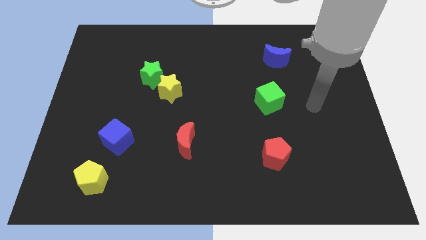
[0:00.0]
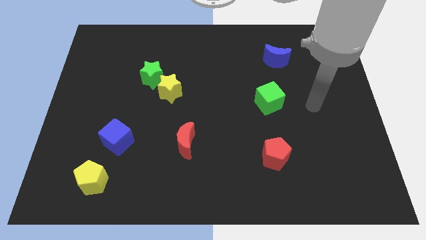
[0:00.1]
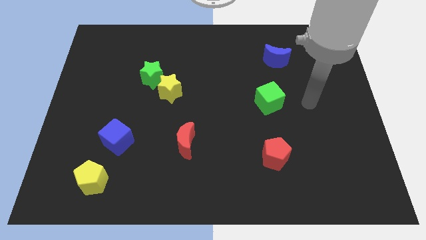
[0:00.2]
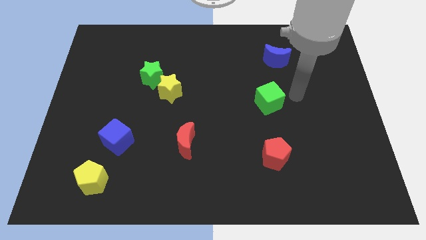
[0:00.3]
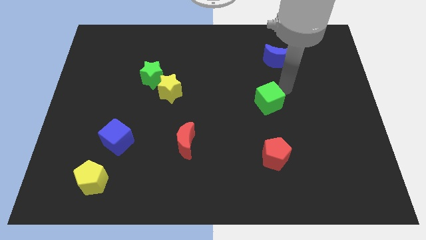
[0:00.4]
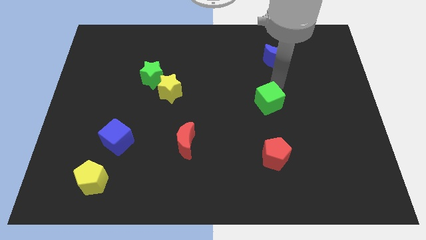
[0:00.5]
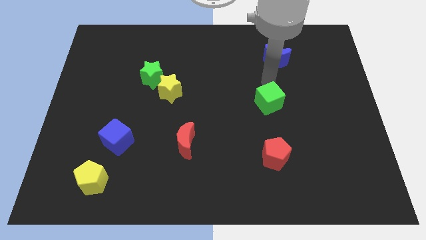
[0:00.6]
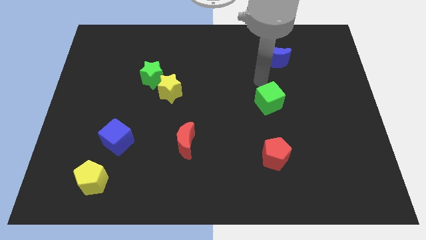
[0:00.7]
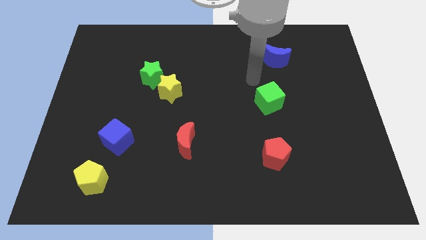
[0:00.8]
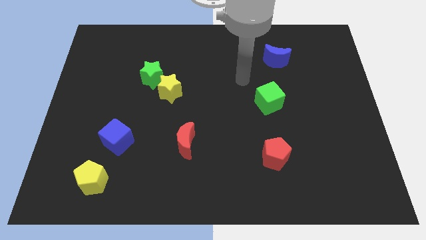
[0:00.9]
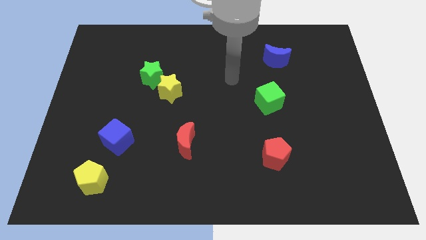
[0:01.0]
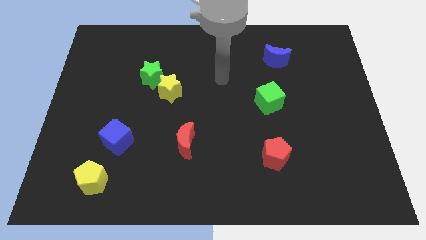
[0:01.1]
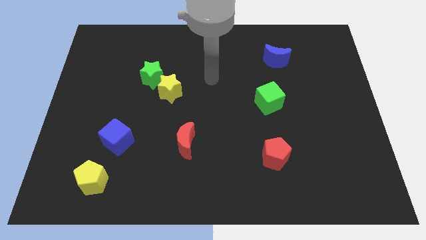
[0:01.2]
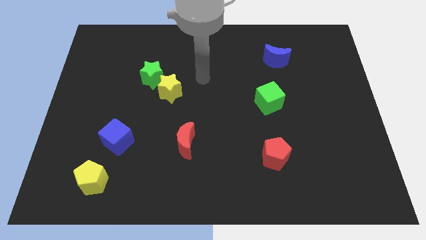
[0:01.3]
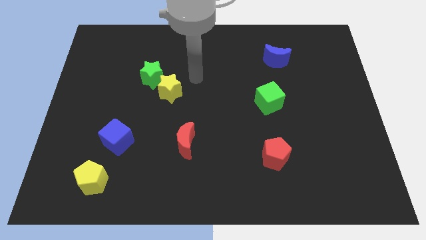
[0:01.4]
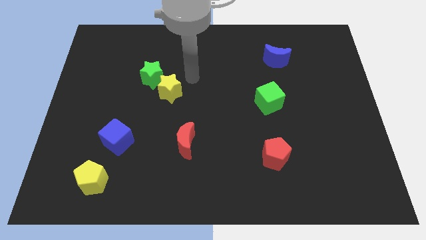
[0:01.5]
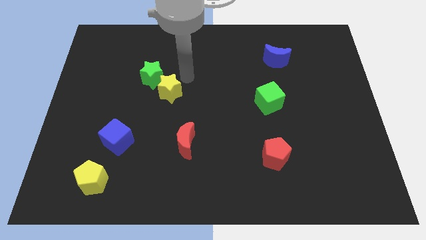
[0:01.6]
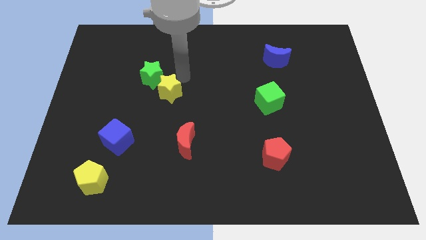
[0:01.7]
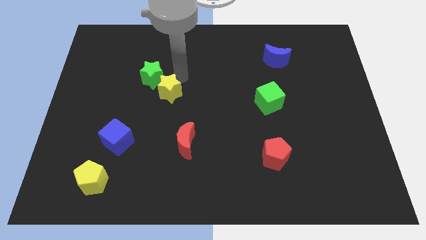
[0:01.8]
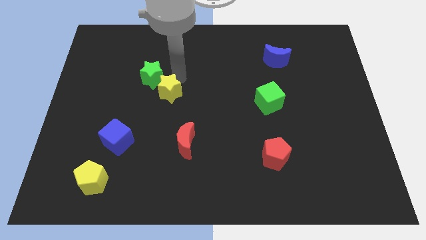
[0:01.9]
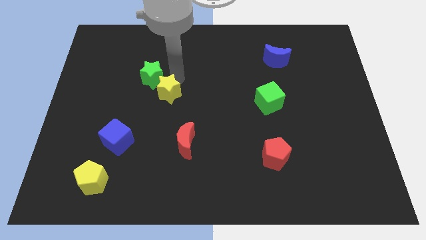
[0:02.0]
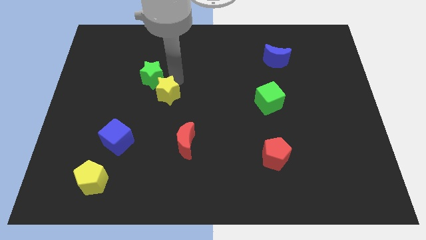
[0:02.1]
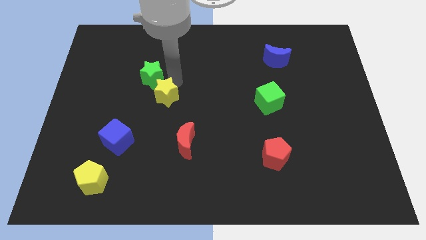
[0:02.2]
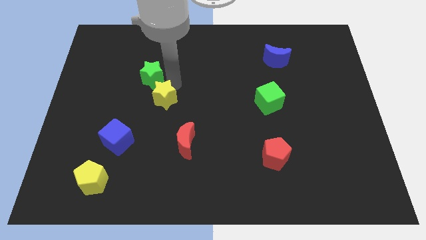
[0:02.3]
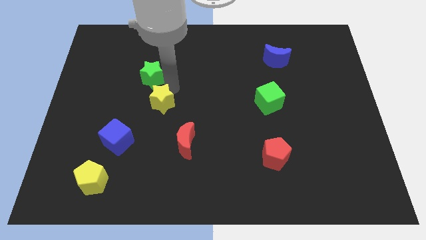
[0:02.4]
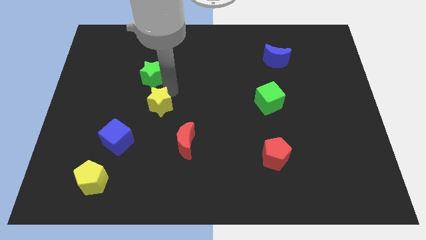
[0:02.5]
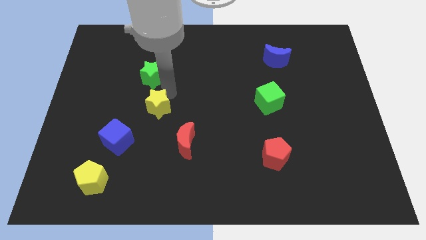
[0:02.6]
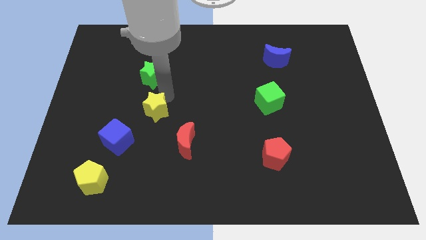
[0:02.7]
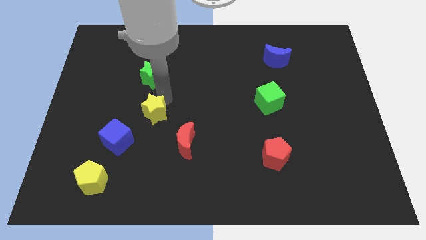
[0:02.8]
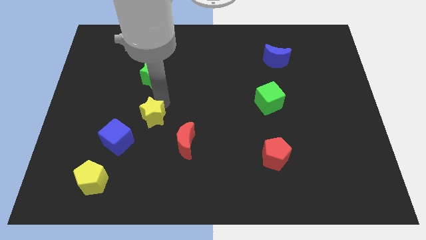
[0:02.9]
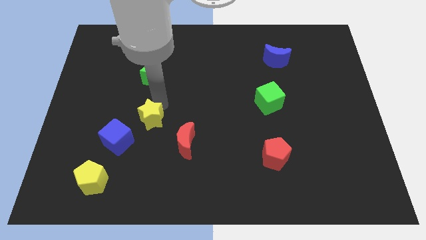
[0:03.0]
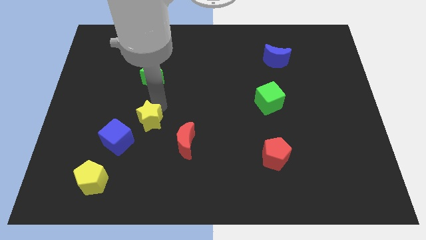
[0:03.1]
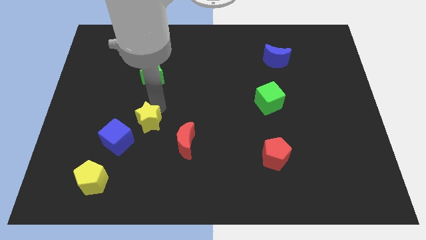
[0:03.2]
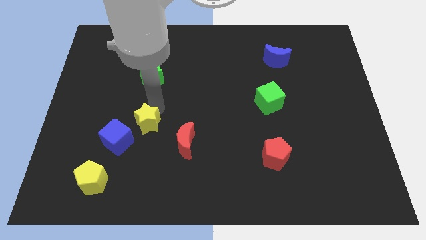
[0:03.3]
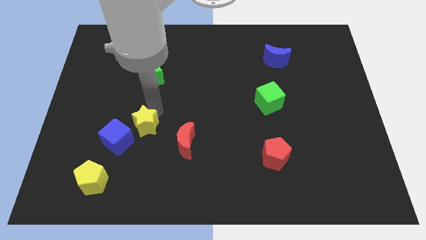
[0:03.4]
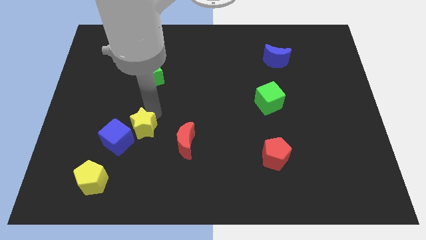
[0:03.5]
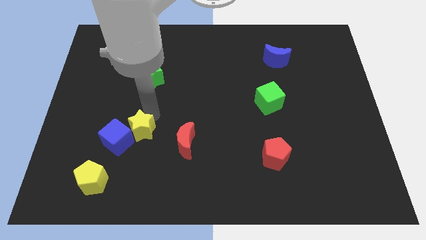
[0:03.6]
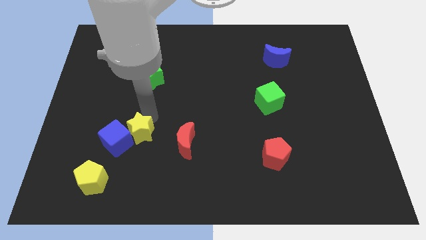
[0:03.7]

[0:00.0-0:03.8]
push the yellow star towards the blue cube

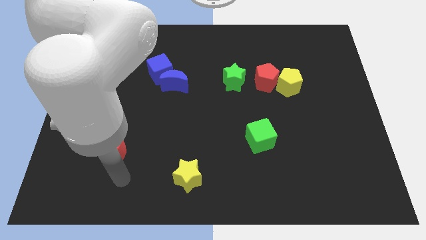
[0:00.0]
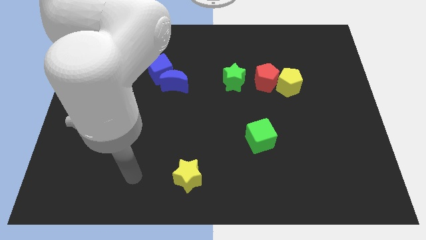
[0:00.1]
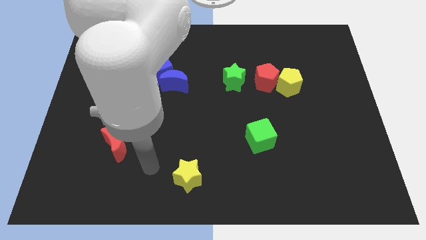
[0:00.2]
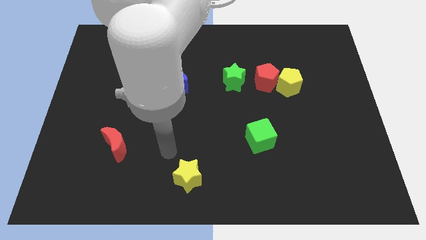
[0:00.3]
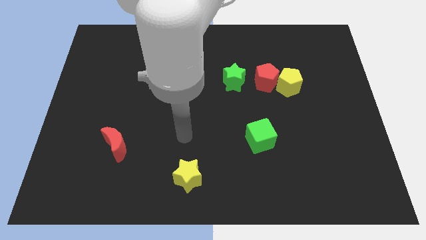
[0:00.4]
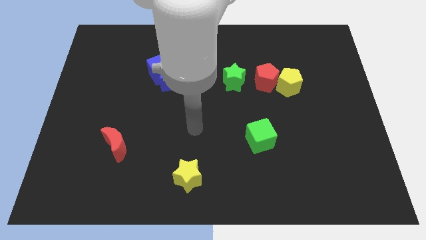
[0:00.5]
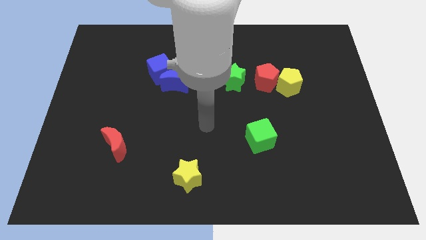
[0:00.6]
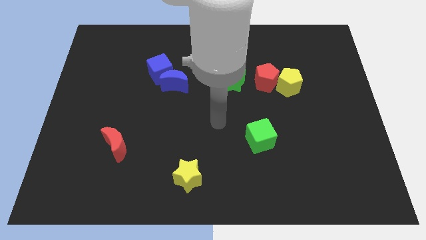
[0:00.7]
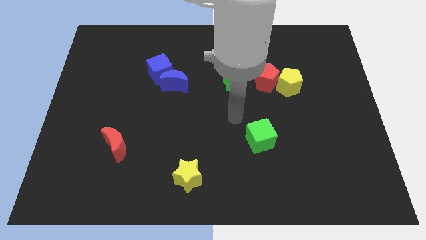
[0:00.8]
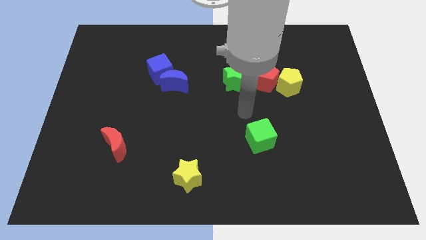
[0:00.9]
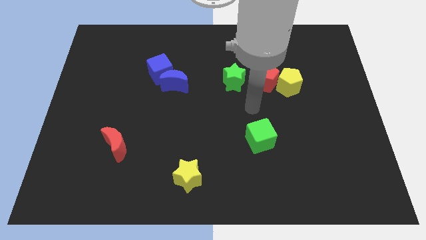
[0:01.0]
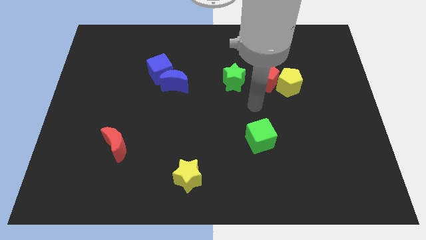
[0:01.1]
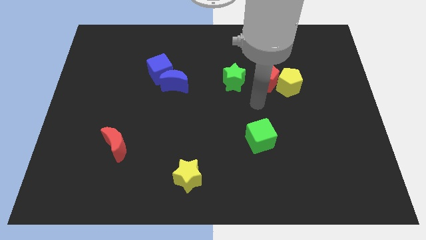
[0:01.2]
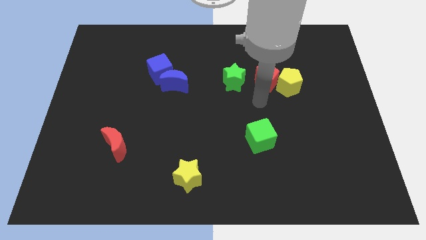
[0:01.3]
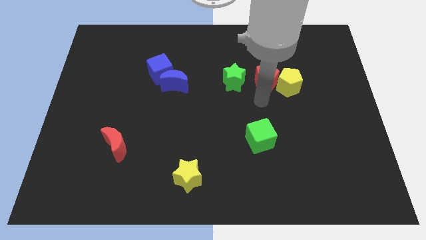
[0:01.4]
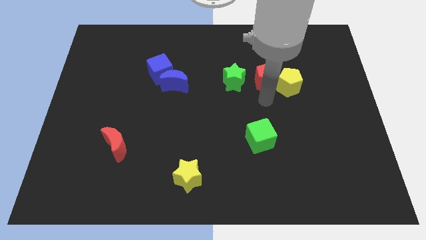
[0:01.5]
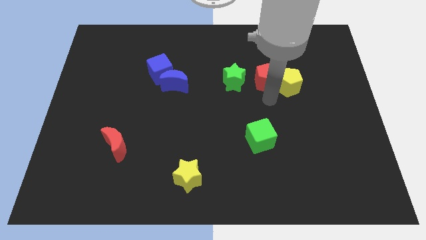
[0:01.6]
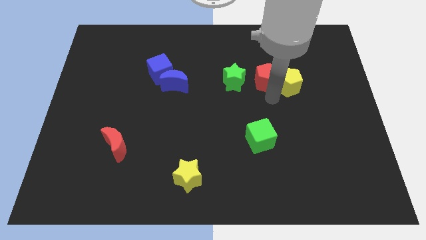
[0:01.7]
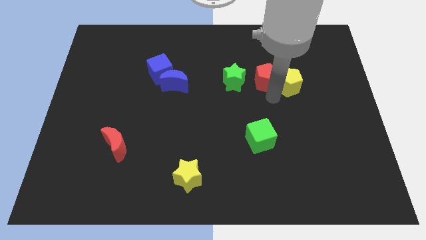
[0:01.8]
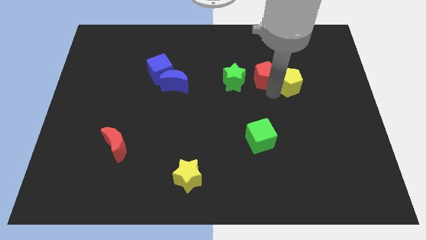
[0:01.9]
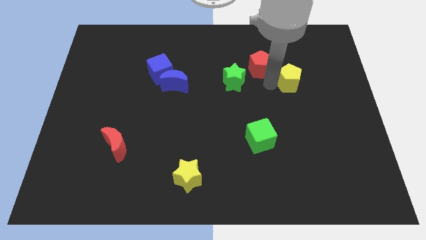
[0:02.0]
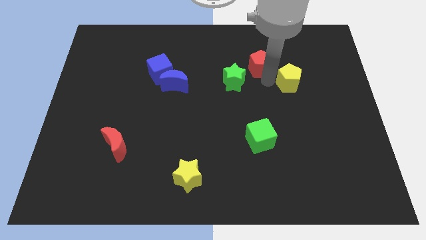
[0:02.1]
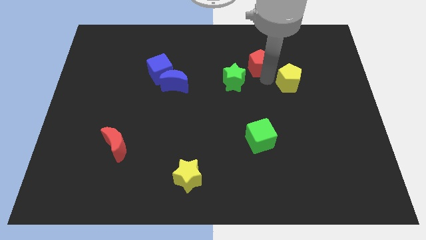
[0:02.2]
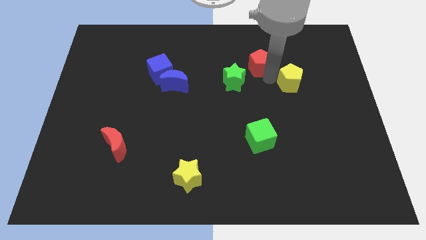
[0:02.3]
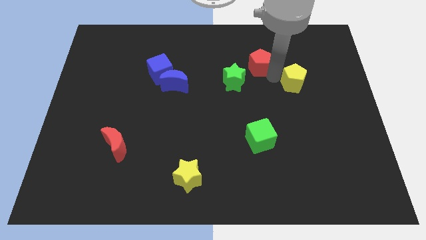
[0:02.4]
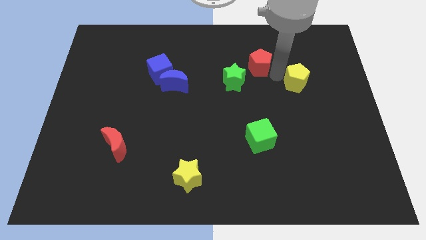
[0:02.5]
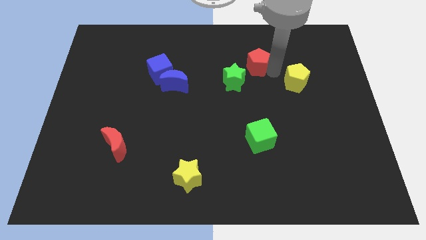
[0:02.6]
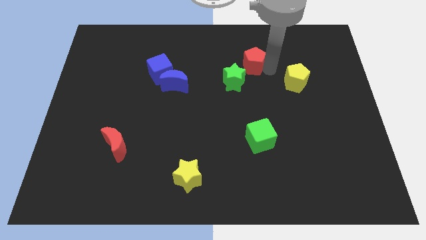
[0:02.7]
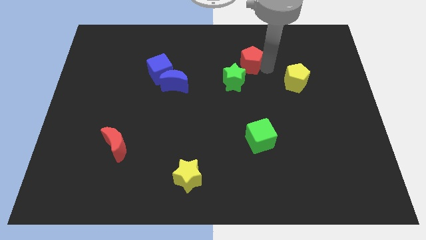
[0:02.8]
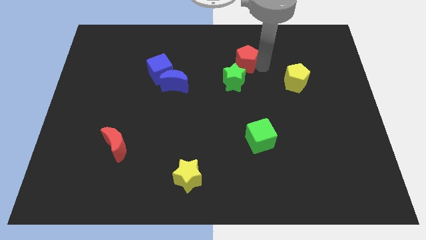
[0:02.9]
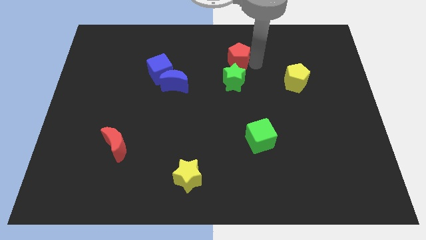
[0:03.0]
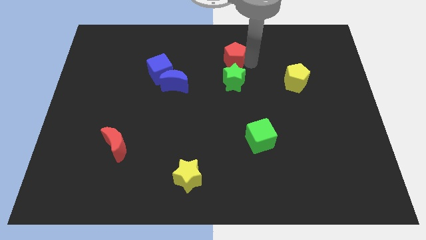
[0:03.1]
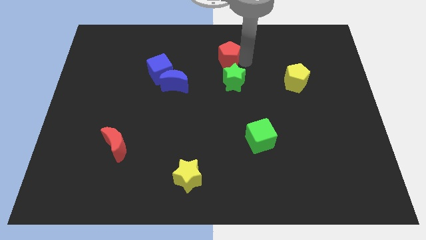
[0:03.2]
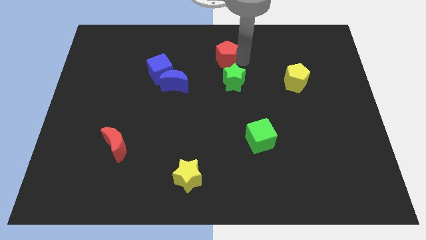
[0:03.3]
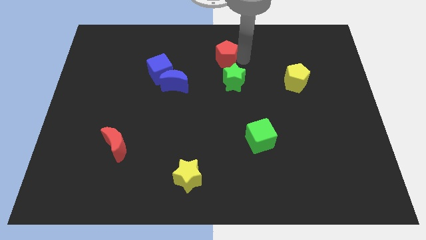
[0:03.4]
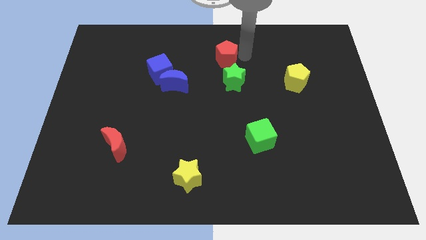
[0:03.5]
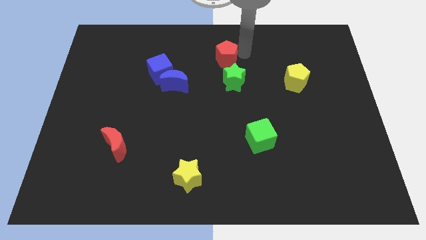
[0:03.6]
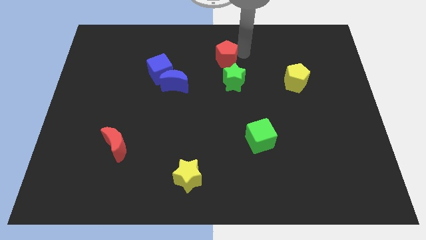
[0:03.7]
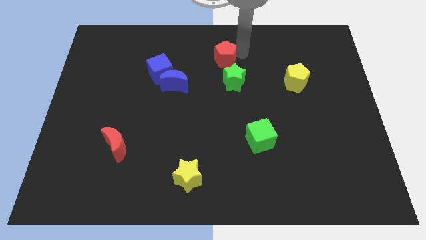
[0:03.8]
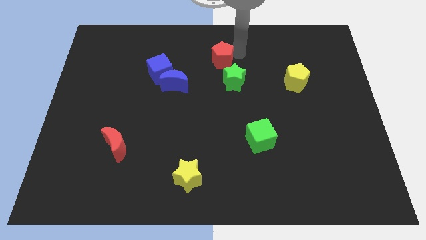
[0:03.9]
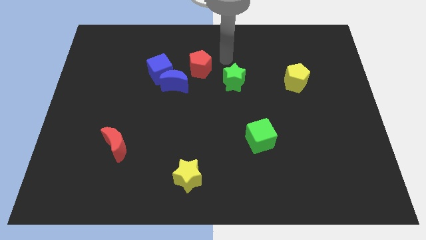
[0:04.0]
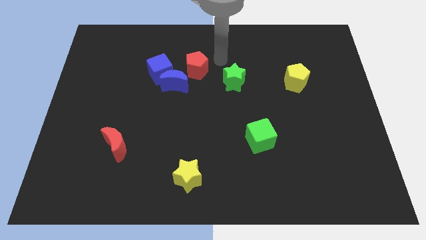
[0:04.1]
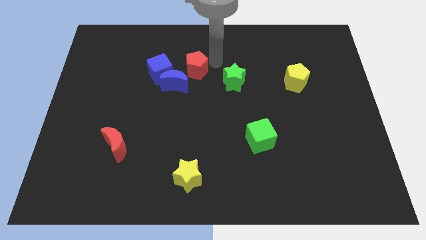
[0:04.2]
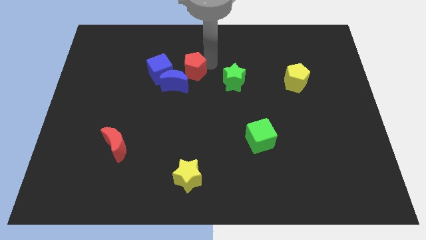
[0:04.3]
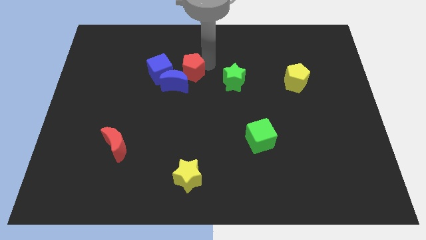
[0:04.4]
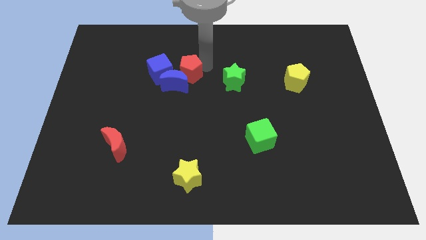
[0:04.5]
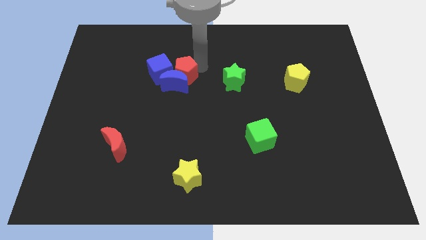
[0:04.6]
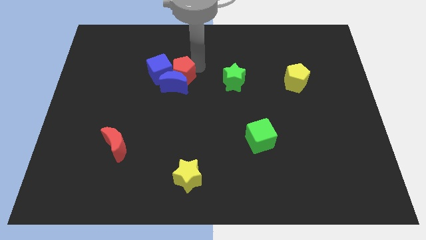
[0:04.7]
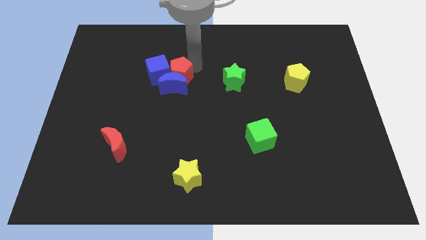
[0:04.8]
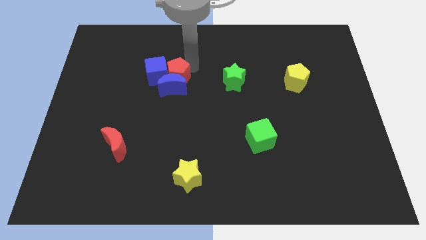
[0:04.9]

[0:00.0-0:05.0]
put the red pentagon to the blue cube
